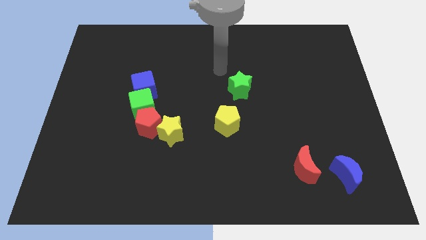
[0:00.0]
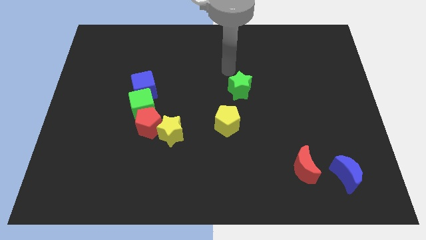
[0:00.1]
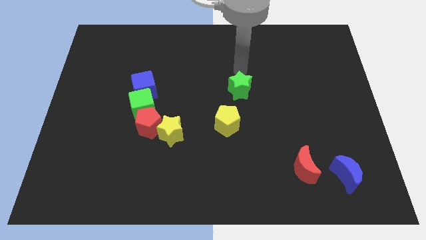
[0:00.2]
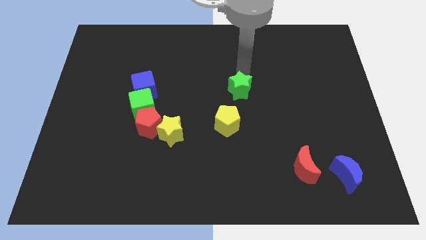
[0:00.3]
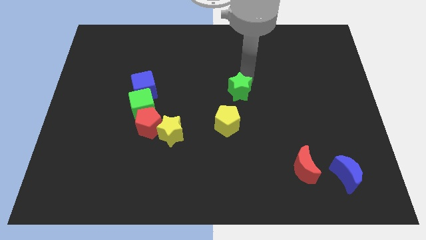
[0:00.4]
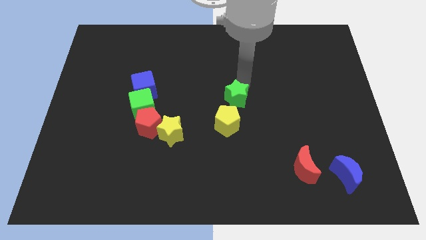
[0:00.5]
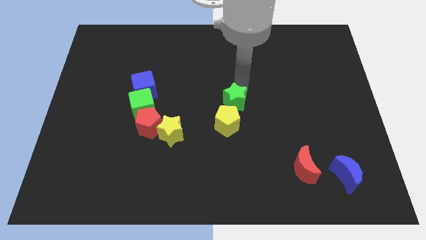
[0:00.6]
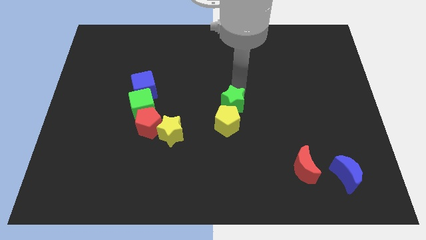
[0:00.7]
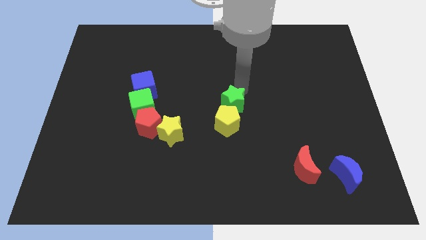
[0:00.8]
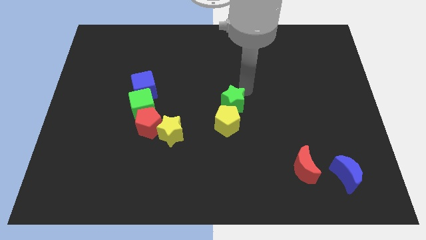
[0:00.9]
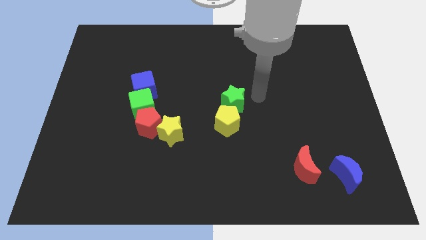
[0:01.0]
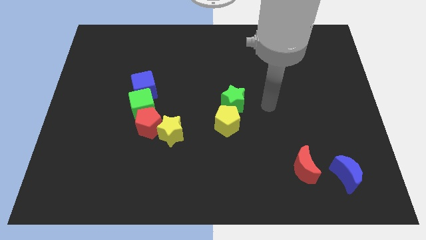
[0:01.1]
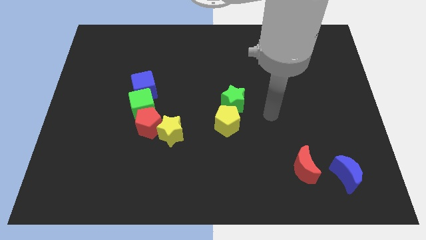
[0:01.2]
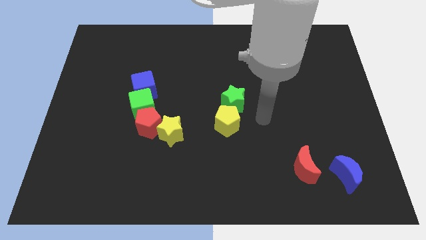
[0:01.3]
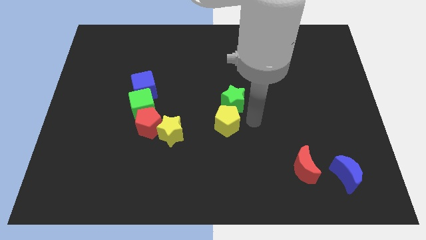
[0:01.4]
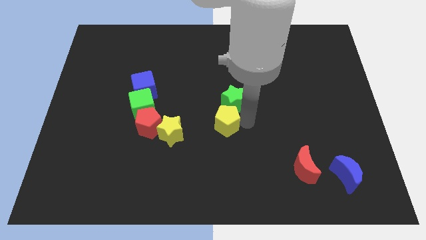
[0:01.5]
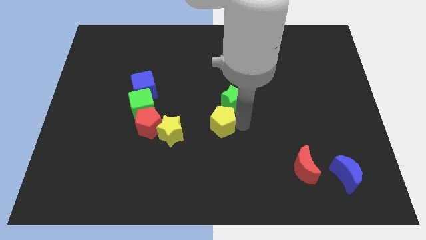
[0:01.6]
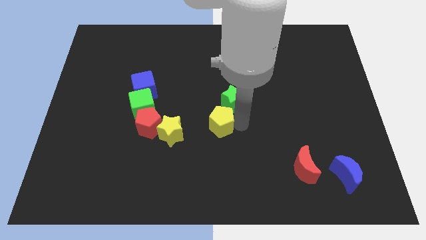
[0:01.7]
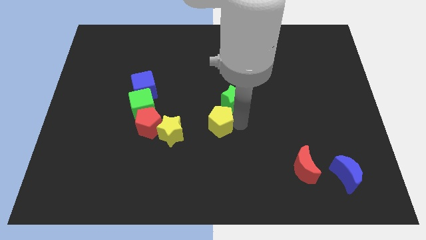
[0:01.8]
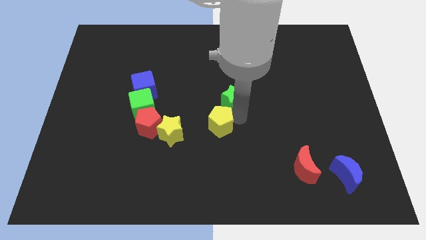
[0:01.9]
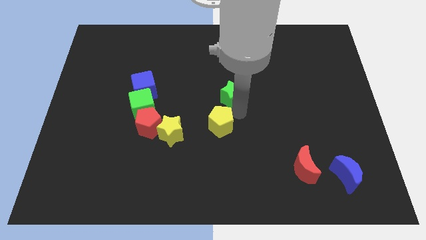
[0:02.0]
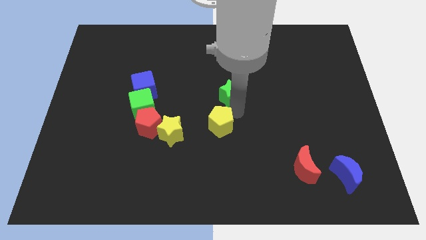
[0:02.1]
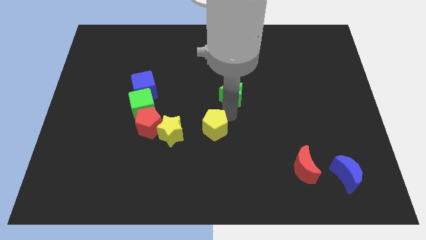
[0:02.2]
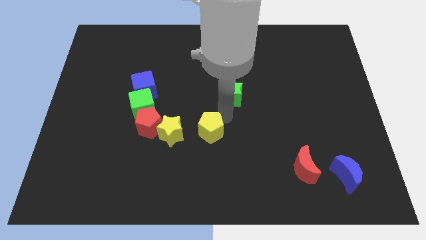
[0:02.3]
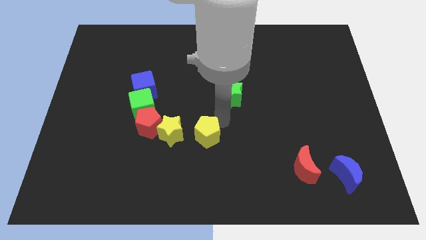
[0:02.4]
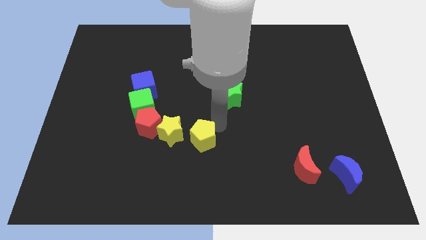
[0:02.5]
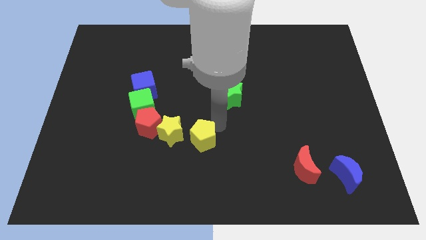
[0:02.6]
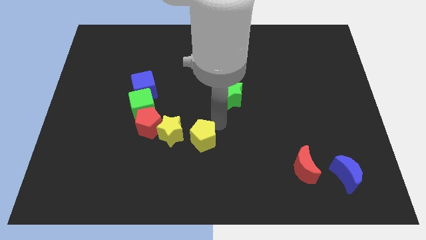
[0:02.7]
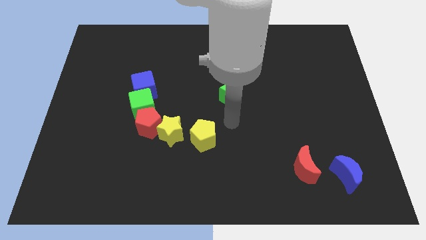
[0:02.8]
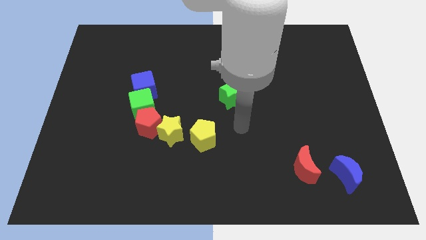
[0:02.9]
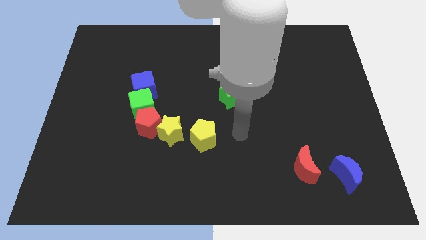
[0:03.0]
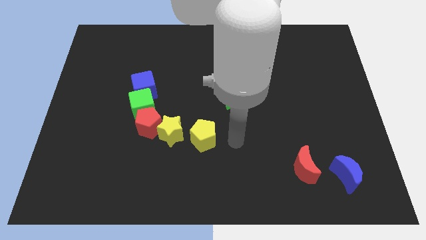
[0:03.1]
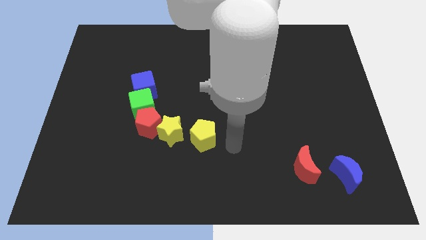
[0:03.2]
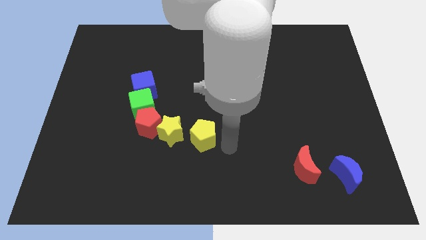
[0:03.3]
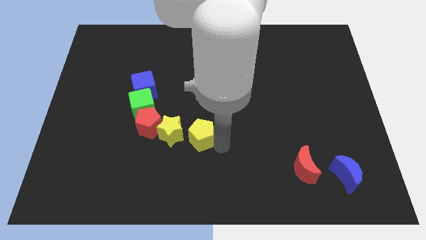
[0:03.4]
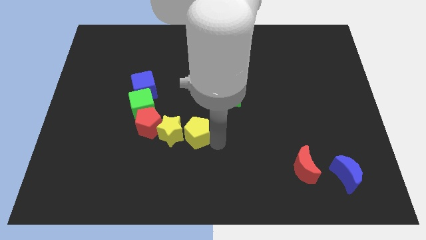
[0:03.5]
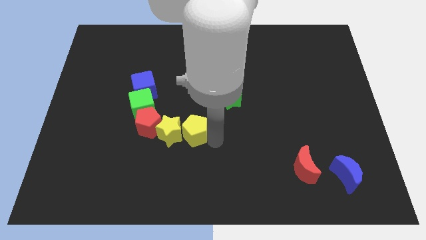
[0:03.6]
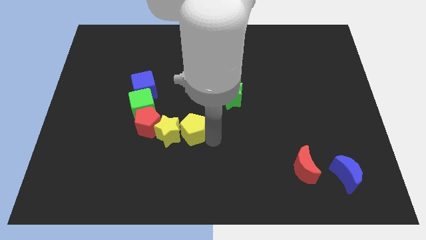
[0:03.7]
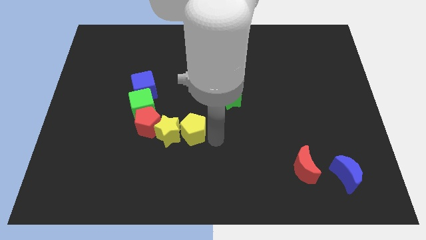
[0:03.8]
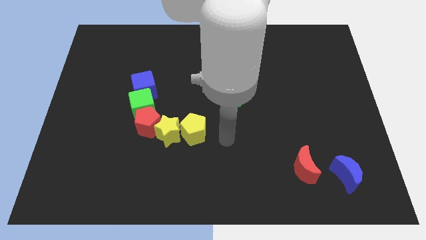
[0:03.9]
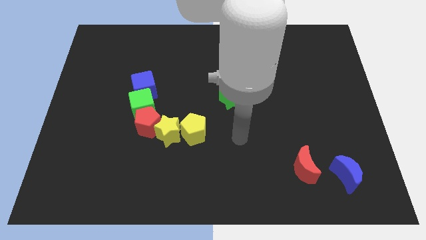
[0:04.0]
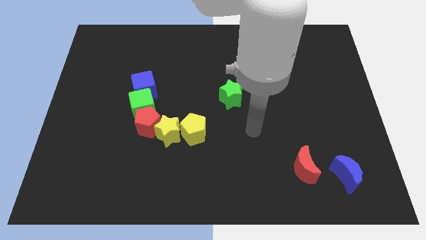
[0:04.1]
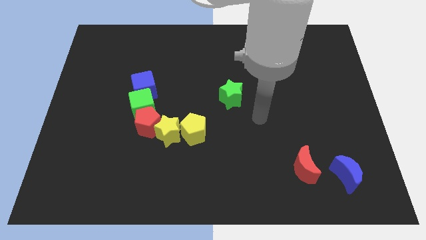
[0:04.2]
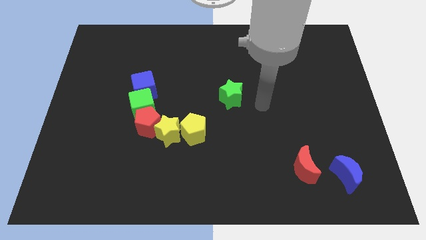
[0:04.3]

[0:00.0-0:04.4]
push the yellow pentagon into the yellow star

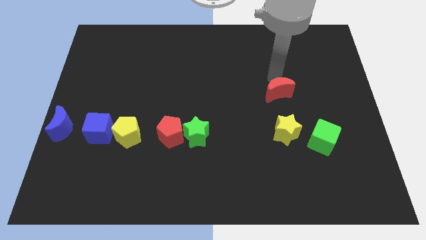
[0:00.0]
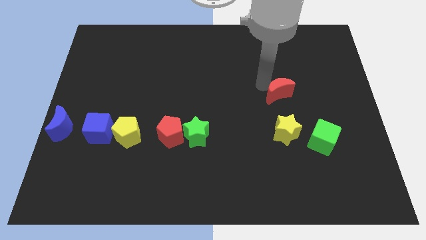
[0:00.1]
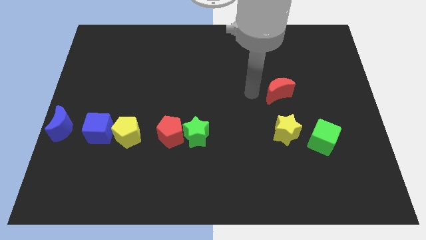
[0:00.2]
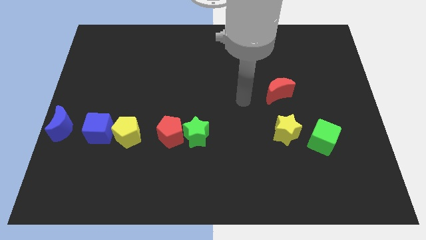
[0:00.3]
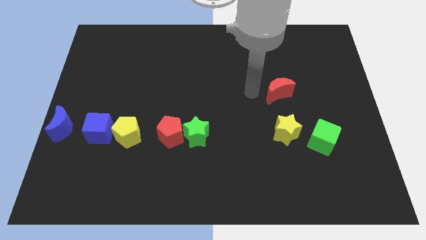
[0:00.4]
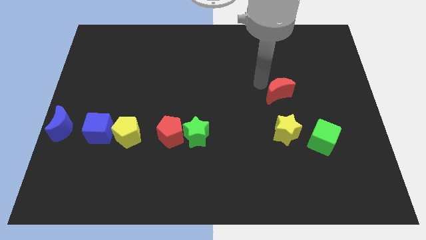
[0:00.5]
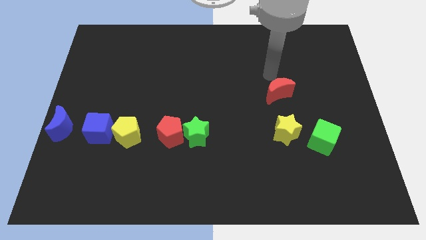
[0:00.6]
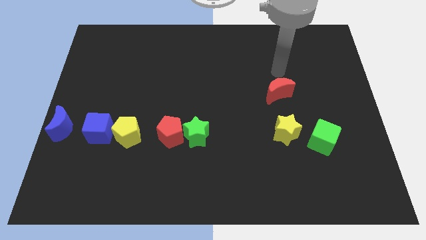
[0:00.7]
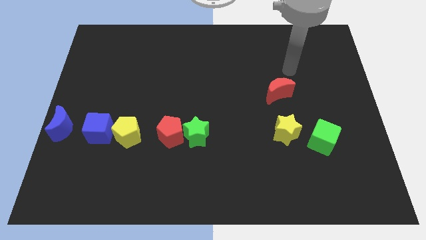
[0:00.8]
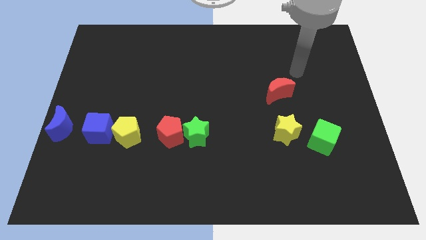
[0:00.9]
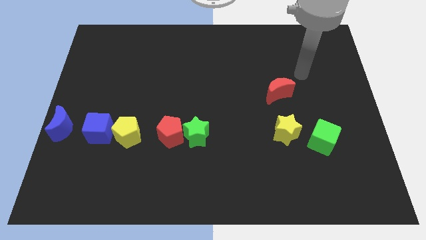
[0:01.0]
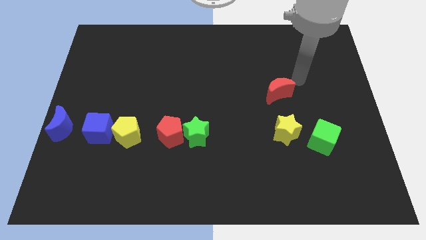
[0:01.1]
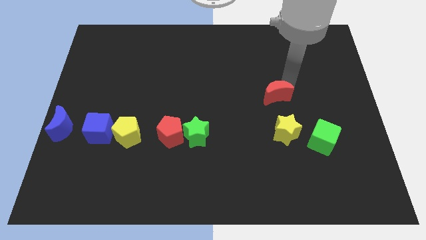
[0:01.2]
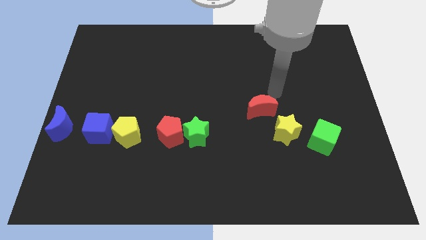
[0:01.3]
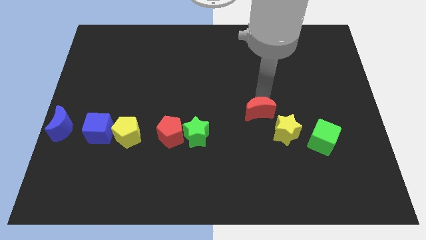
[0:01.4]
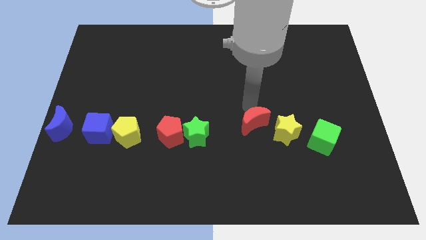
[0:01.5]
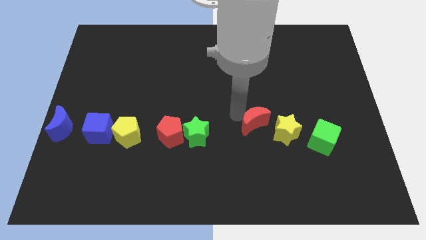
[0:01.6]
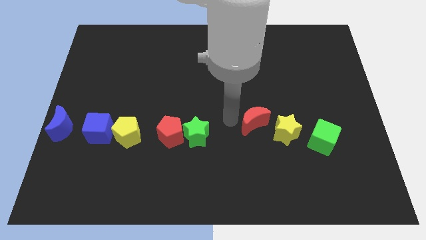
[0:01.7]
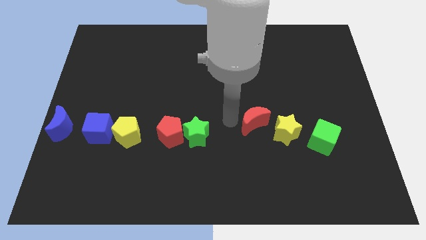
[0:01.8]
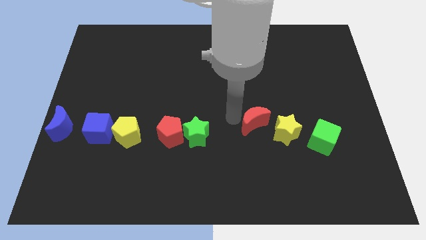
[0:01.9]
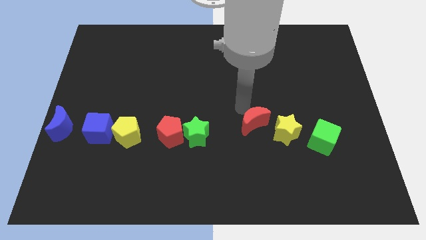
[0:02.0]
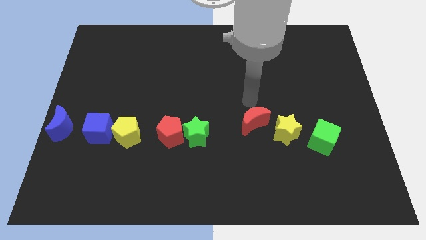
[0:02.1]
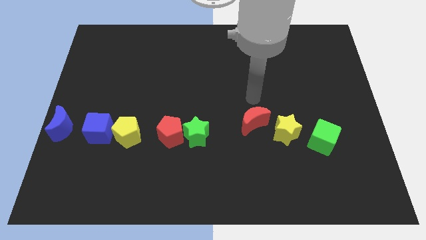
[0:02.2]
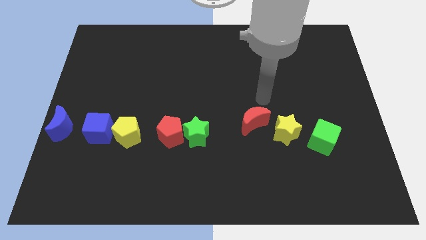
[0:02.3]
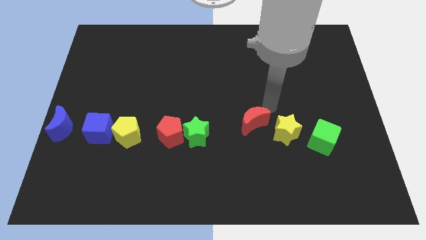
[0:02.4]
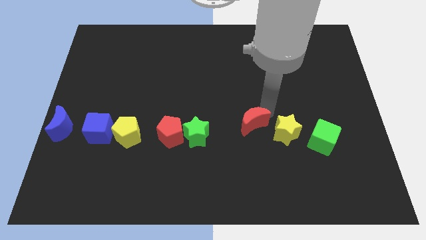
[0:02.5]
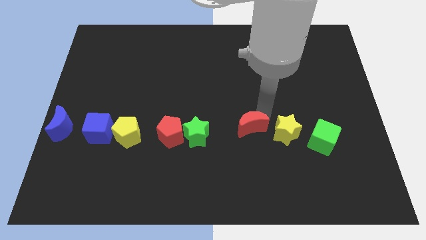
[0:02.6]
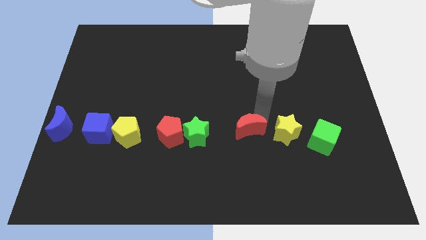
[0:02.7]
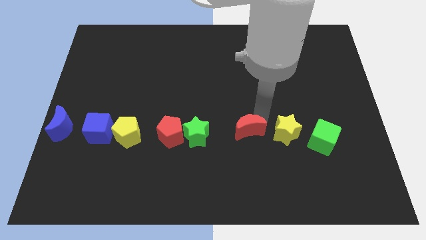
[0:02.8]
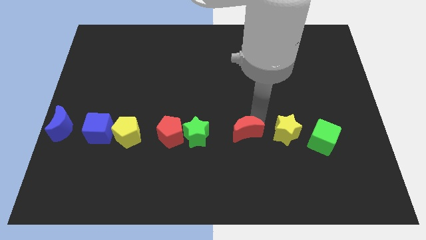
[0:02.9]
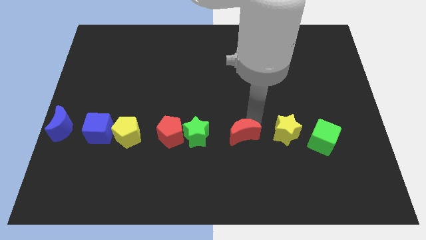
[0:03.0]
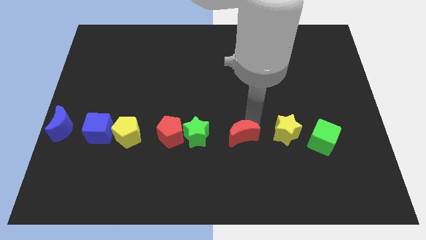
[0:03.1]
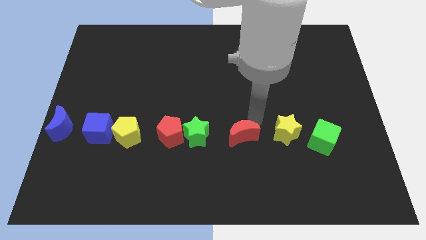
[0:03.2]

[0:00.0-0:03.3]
put the red moon in between the green star and the yellow star

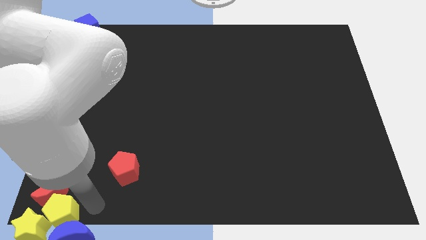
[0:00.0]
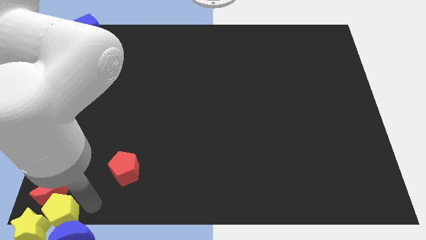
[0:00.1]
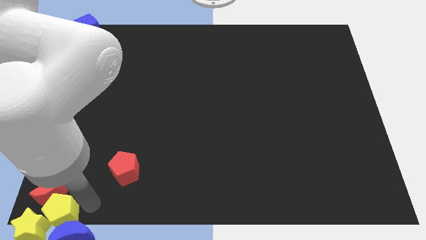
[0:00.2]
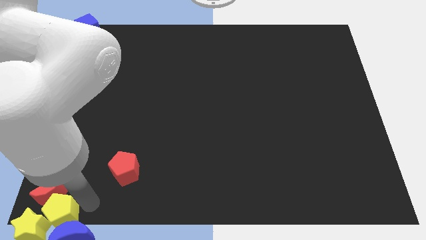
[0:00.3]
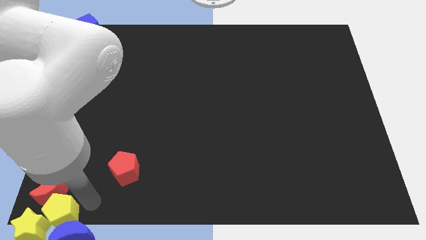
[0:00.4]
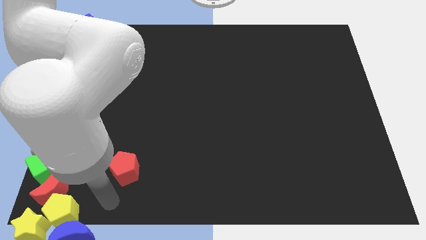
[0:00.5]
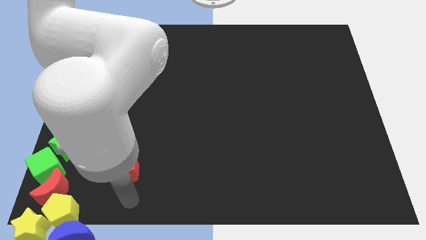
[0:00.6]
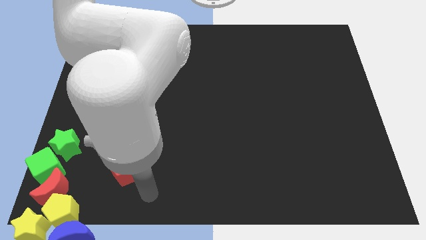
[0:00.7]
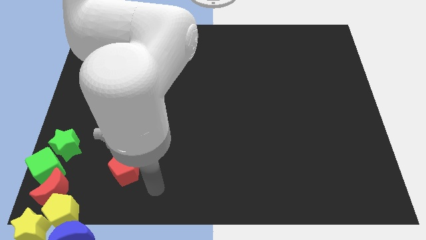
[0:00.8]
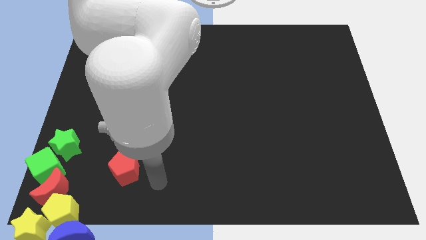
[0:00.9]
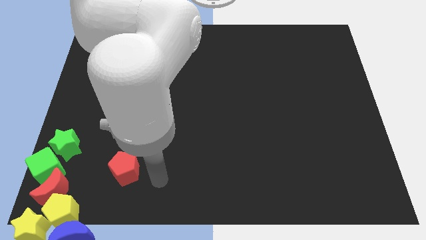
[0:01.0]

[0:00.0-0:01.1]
go away from the group of blocks

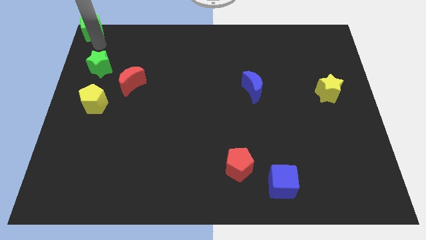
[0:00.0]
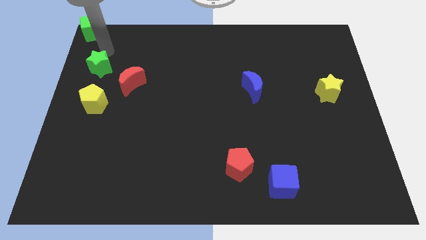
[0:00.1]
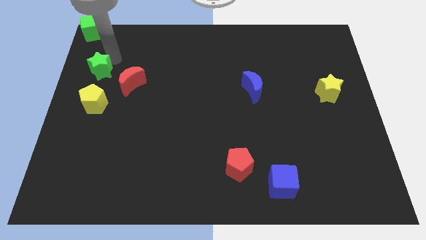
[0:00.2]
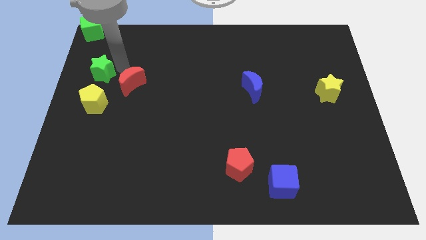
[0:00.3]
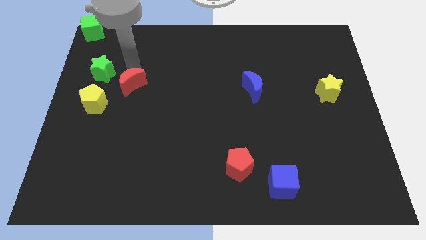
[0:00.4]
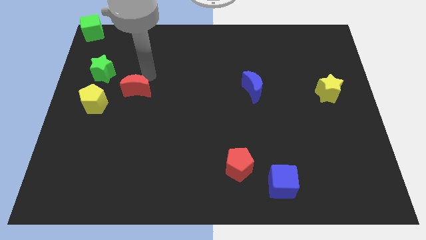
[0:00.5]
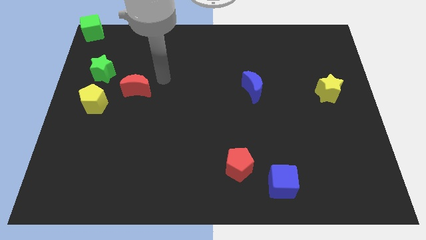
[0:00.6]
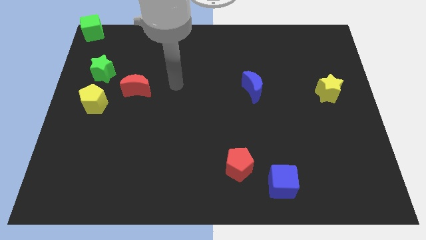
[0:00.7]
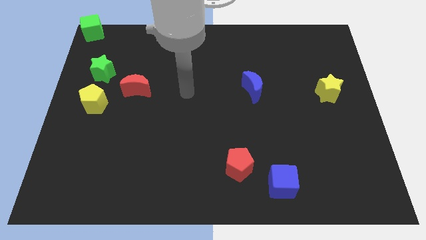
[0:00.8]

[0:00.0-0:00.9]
reposition the green star and red crescent
